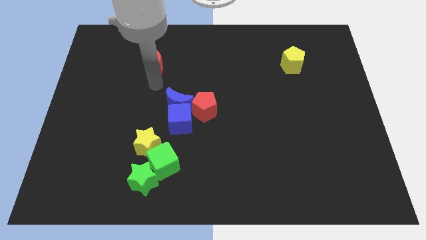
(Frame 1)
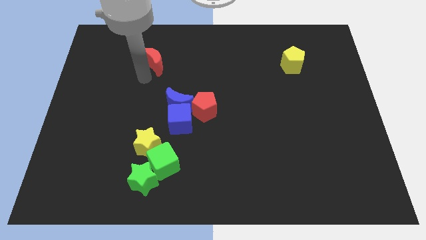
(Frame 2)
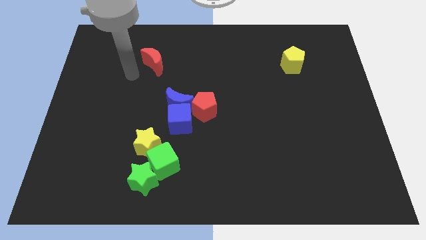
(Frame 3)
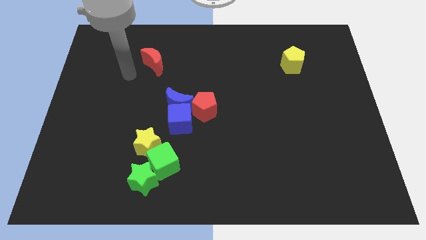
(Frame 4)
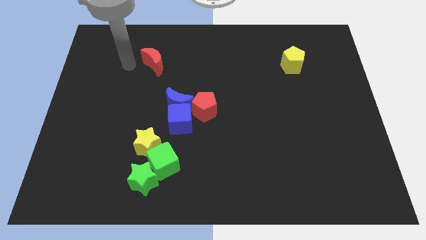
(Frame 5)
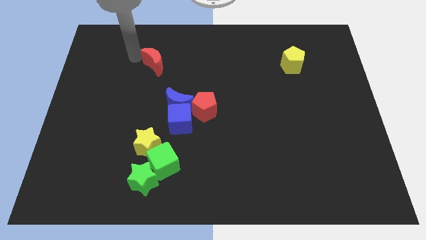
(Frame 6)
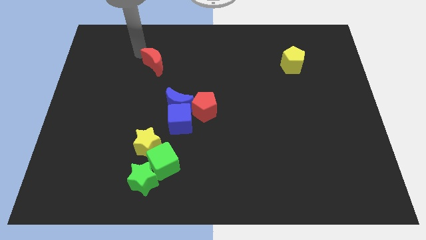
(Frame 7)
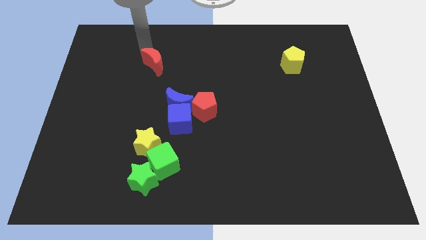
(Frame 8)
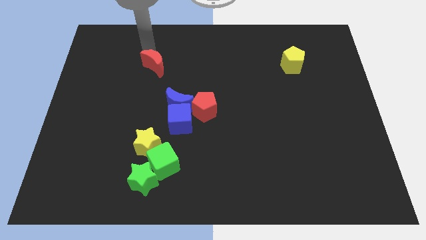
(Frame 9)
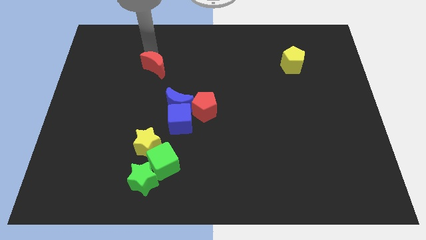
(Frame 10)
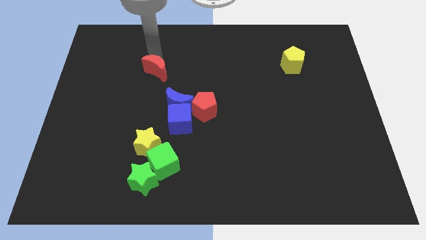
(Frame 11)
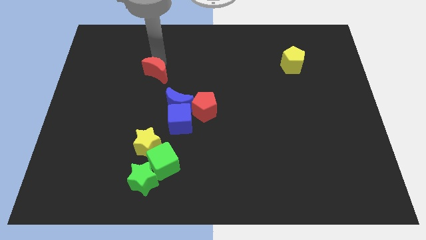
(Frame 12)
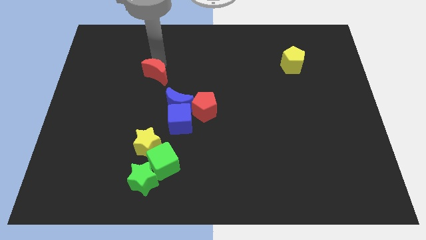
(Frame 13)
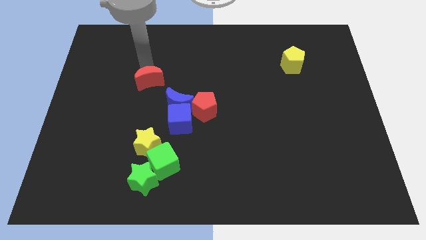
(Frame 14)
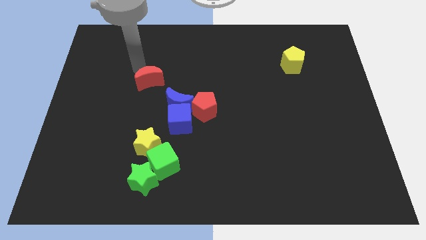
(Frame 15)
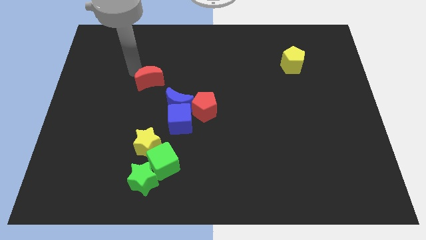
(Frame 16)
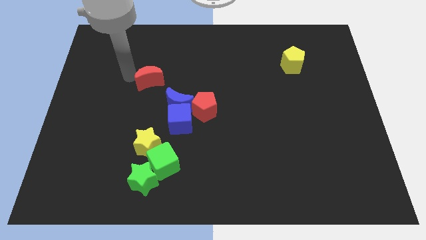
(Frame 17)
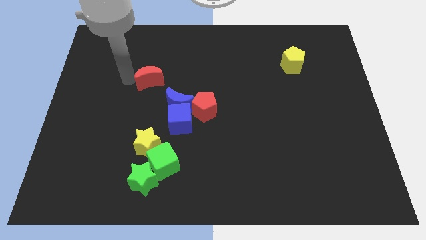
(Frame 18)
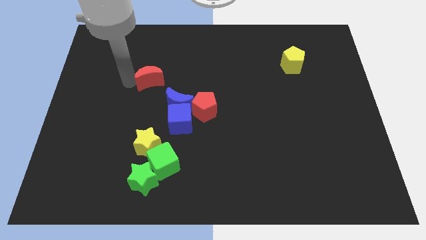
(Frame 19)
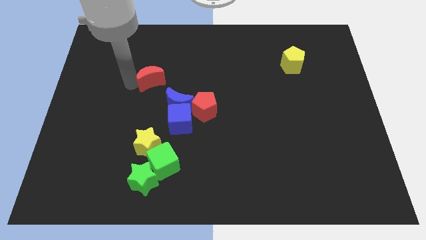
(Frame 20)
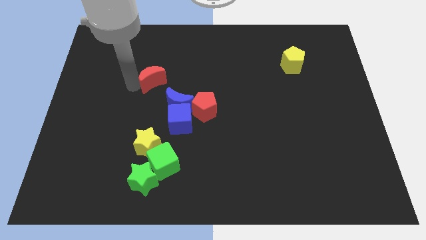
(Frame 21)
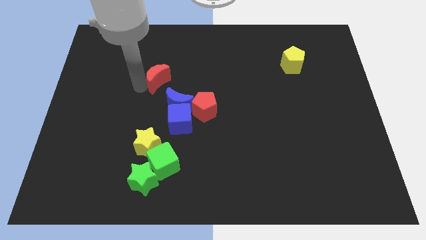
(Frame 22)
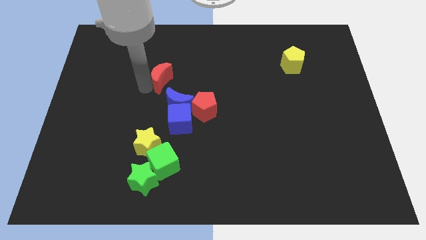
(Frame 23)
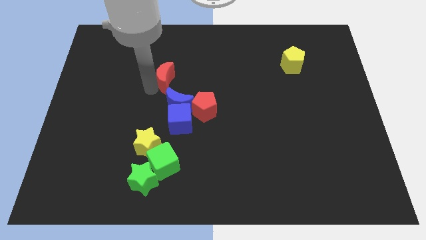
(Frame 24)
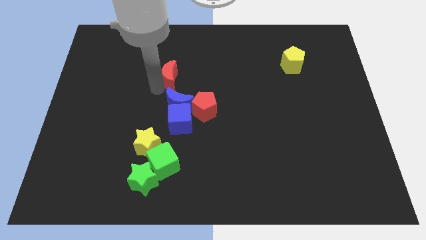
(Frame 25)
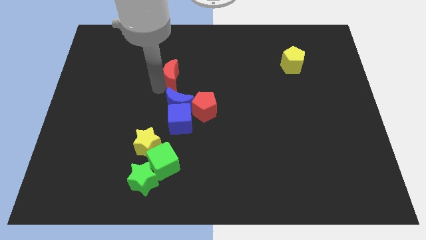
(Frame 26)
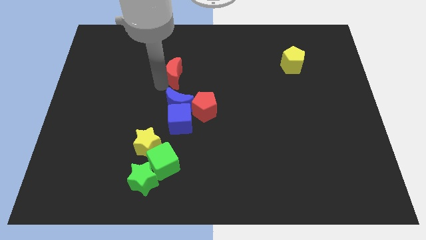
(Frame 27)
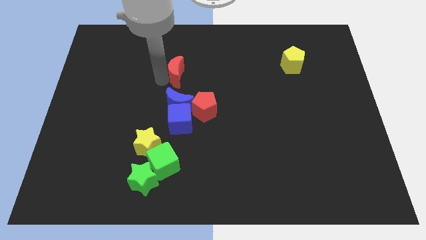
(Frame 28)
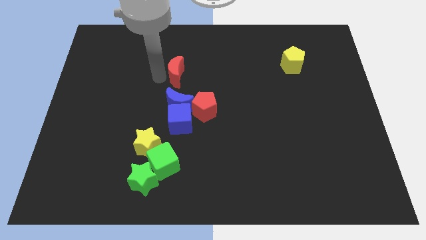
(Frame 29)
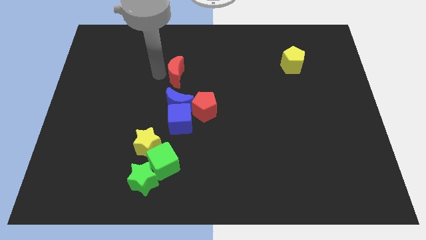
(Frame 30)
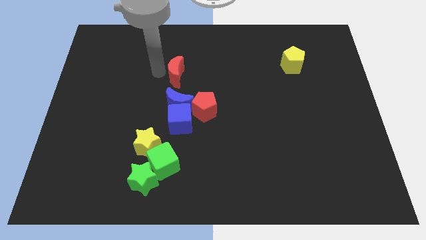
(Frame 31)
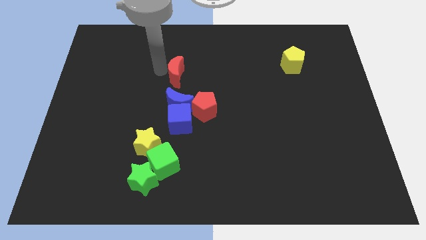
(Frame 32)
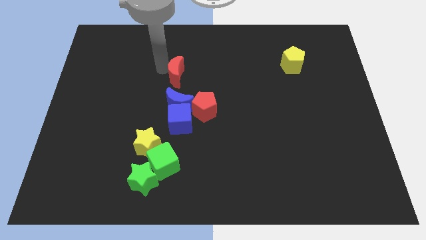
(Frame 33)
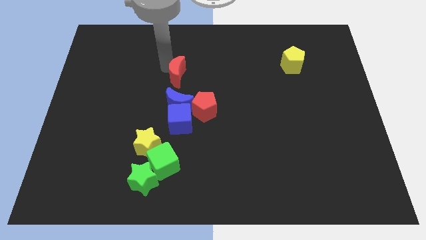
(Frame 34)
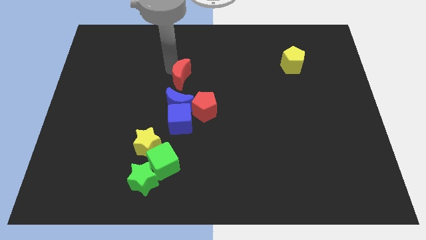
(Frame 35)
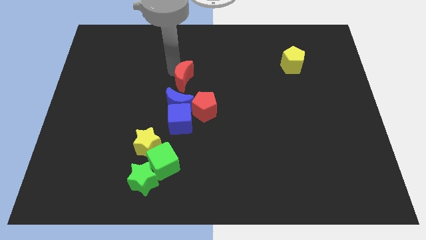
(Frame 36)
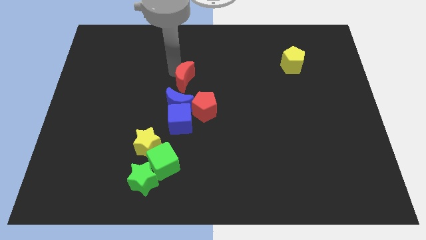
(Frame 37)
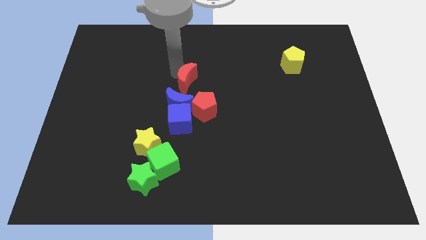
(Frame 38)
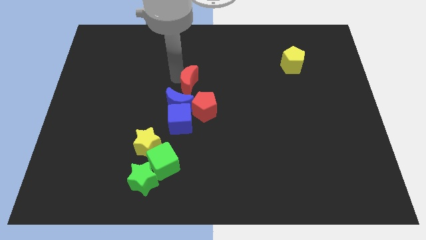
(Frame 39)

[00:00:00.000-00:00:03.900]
place red moon above blue moon

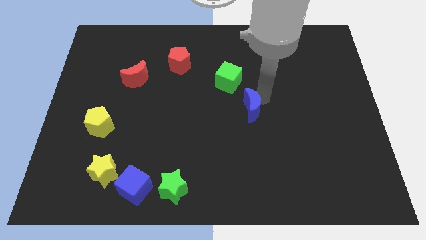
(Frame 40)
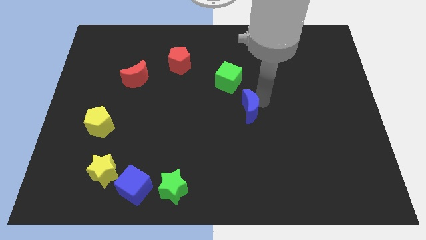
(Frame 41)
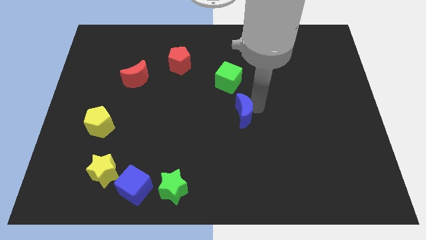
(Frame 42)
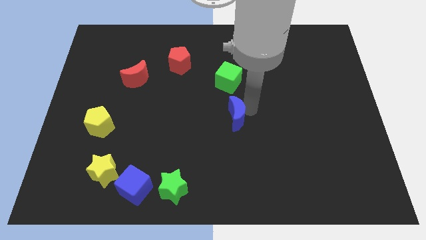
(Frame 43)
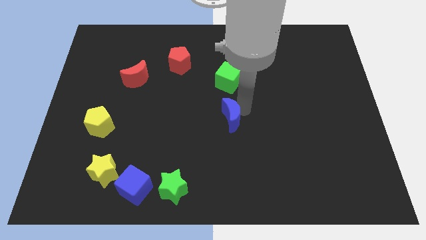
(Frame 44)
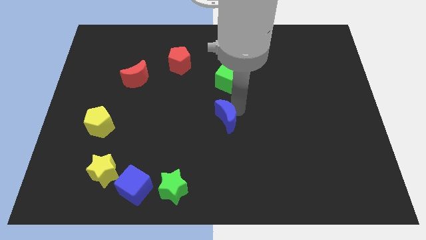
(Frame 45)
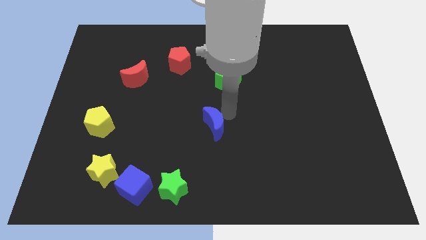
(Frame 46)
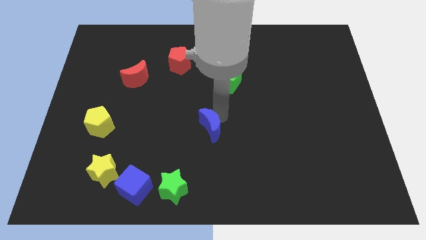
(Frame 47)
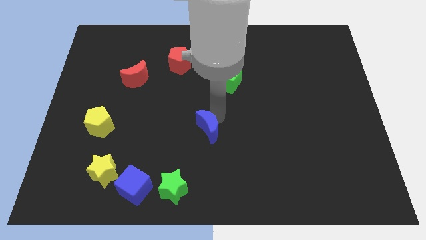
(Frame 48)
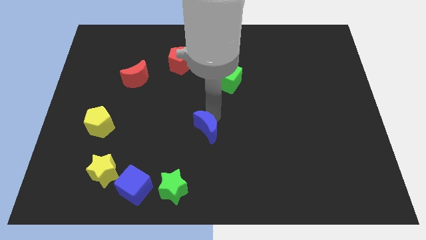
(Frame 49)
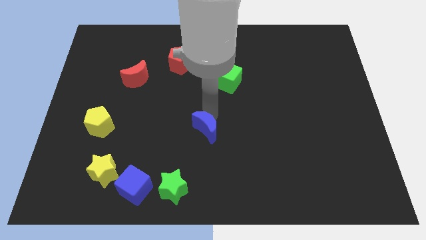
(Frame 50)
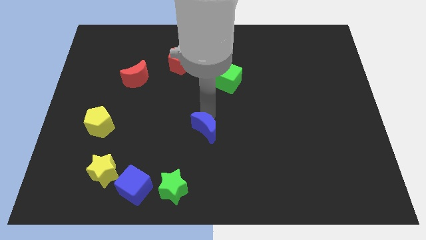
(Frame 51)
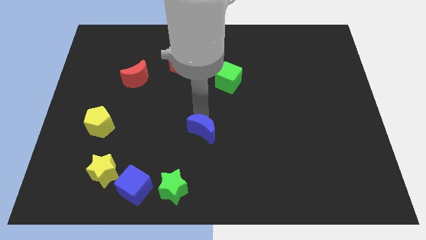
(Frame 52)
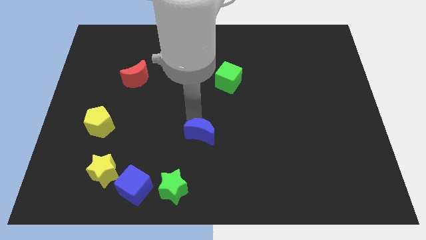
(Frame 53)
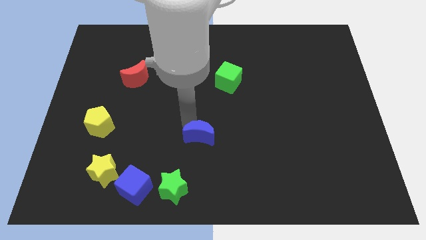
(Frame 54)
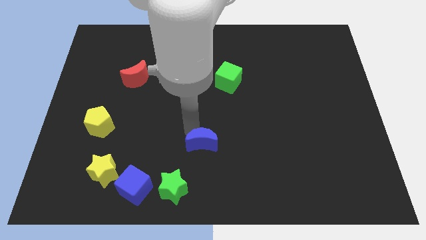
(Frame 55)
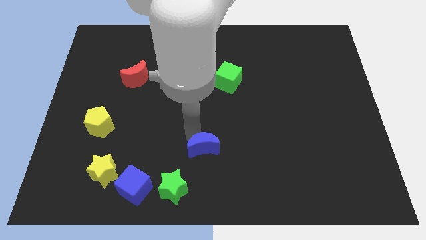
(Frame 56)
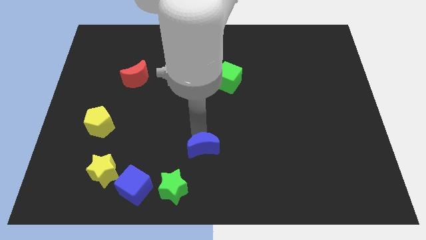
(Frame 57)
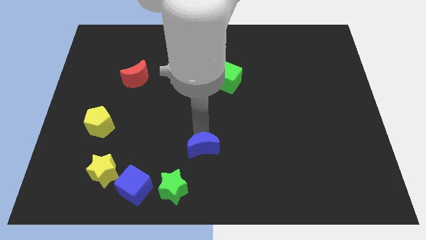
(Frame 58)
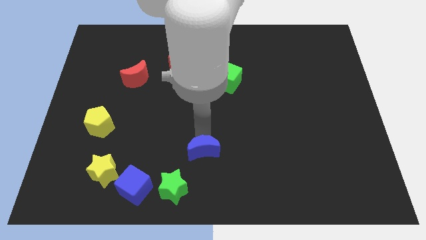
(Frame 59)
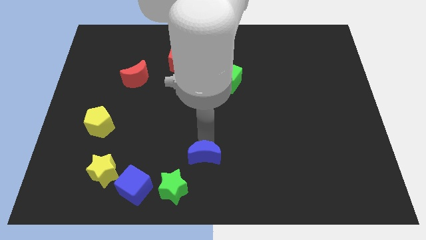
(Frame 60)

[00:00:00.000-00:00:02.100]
move blue crescent towards the green star

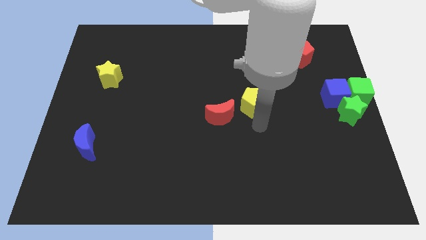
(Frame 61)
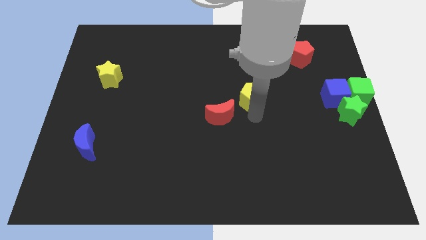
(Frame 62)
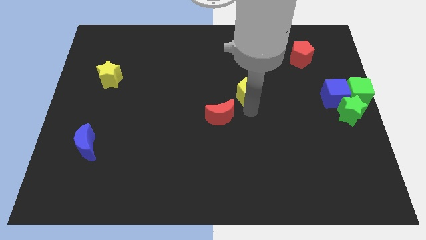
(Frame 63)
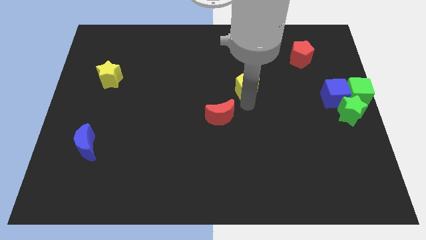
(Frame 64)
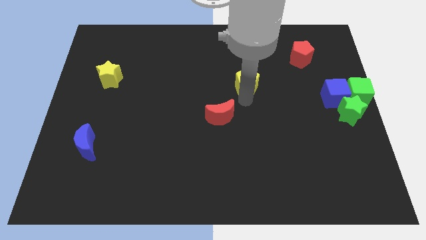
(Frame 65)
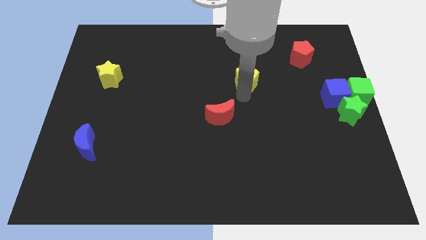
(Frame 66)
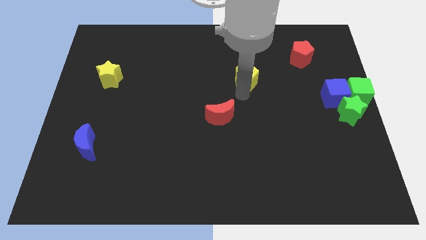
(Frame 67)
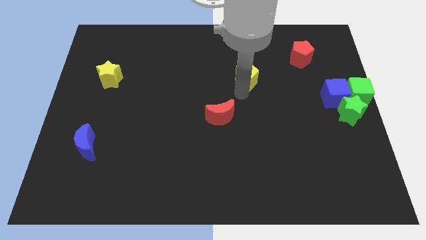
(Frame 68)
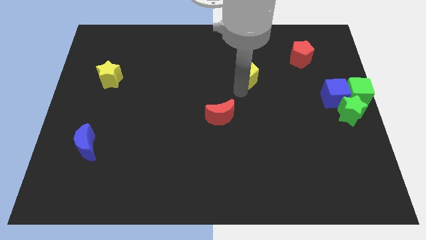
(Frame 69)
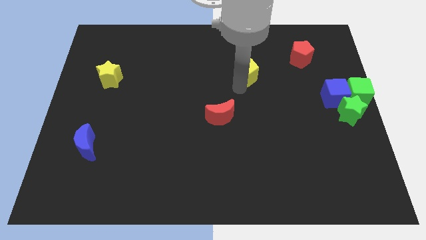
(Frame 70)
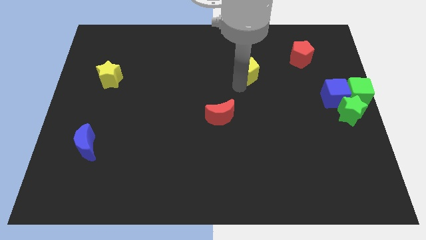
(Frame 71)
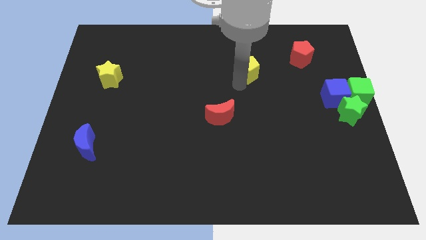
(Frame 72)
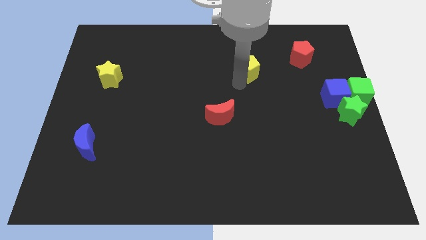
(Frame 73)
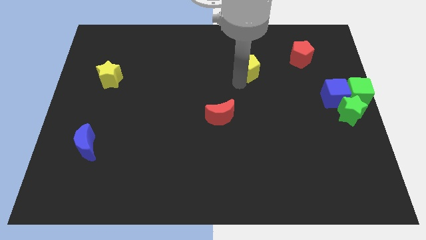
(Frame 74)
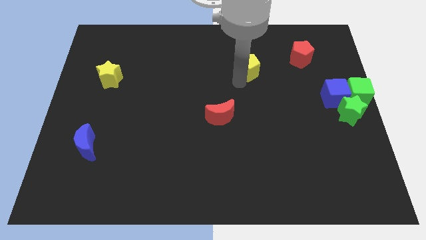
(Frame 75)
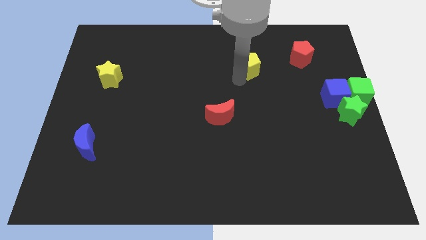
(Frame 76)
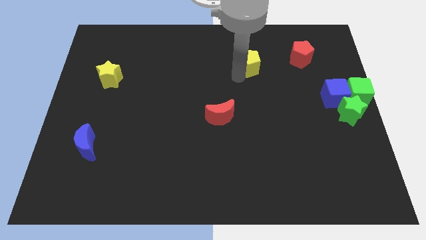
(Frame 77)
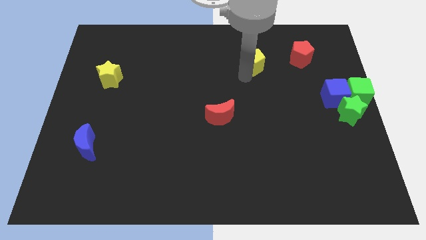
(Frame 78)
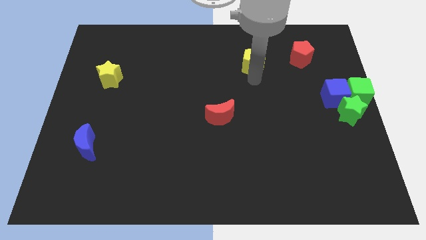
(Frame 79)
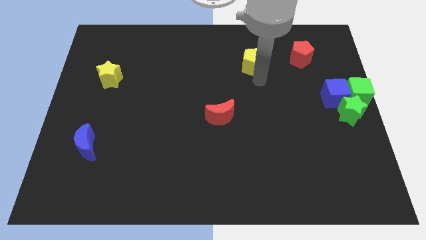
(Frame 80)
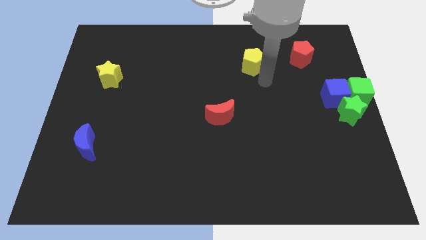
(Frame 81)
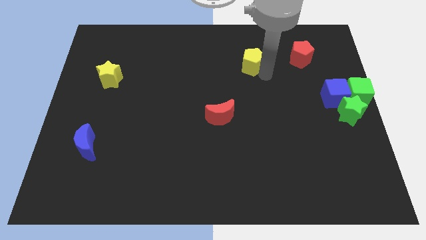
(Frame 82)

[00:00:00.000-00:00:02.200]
push the yellow pentagon towards the top side

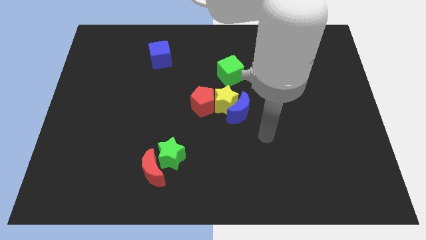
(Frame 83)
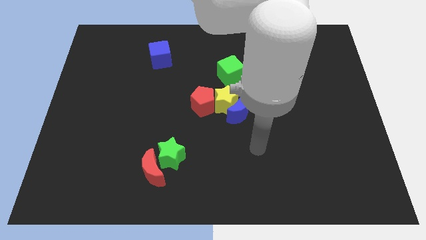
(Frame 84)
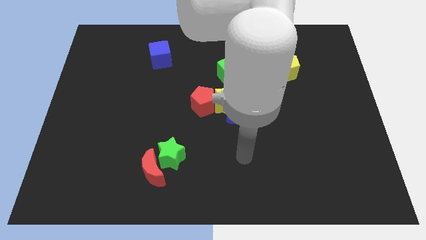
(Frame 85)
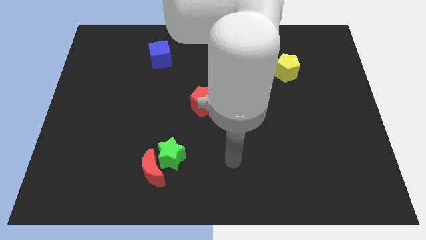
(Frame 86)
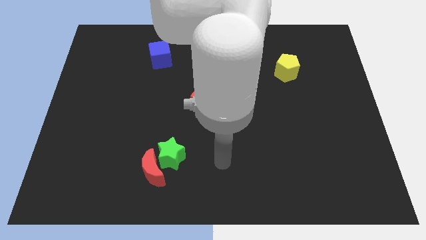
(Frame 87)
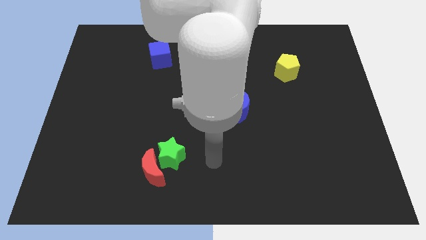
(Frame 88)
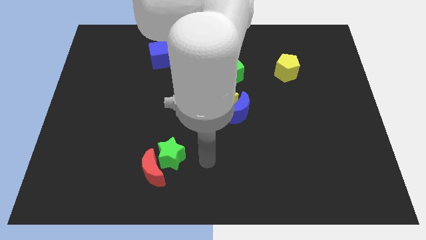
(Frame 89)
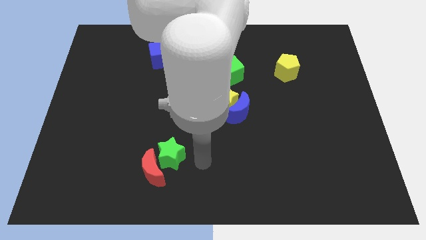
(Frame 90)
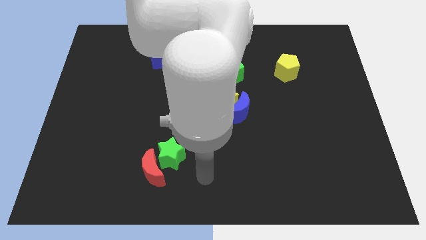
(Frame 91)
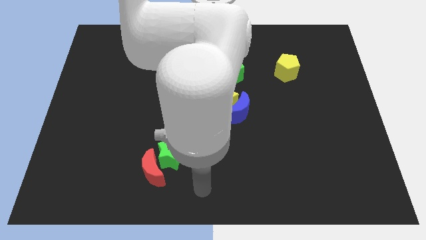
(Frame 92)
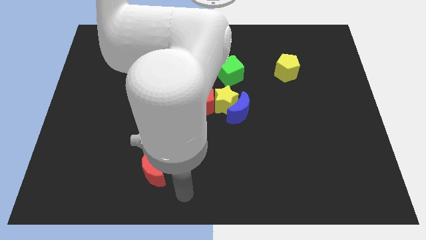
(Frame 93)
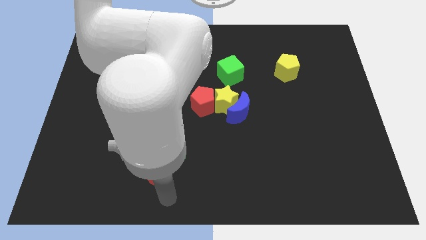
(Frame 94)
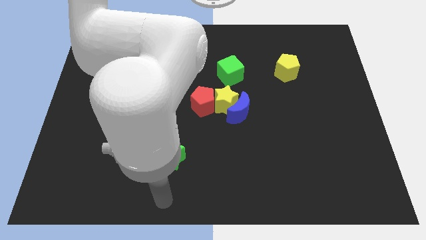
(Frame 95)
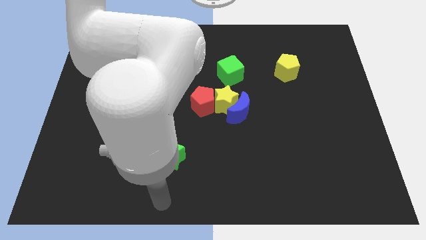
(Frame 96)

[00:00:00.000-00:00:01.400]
drag your arm to the bottom center
